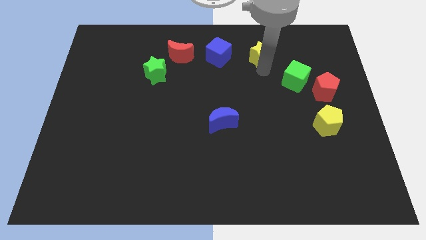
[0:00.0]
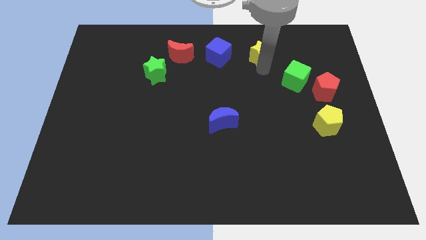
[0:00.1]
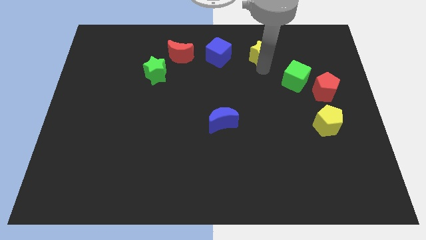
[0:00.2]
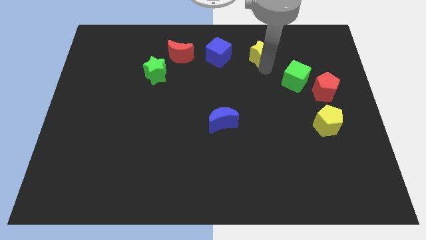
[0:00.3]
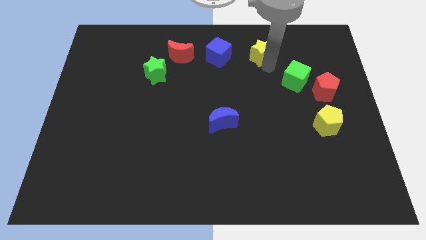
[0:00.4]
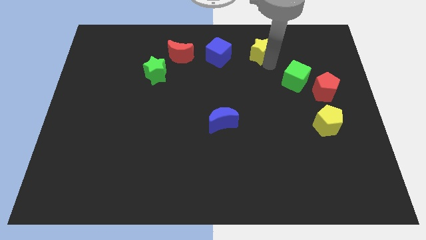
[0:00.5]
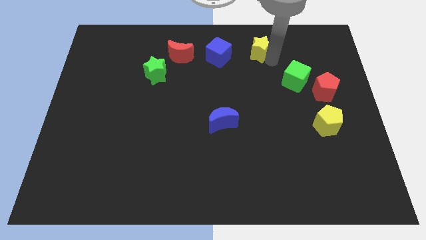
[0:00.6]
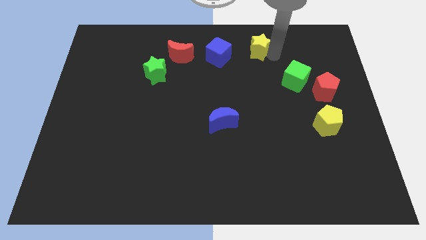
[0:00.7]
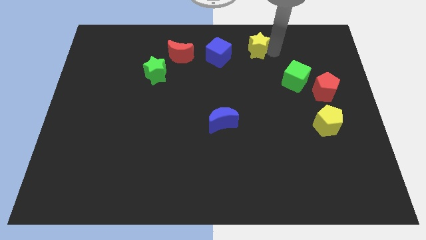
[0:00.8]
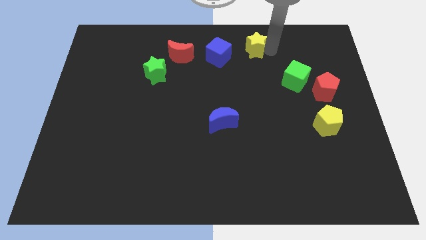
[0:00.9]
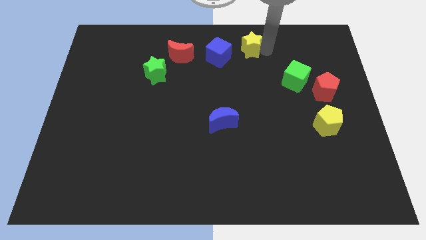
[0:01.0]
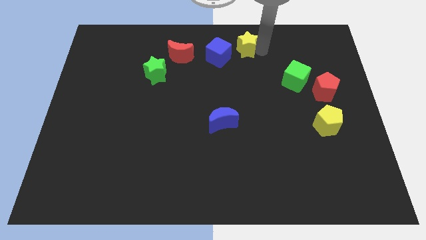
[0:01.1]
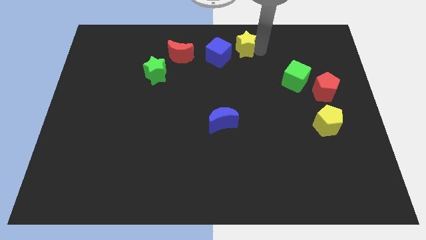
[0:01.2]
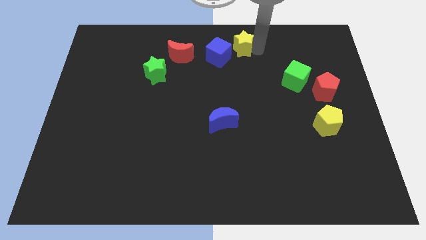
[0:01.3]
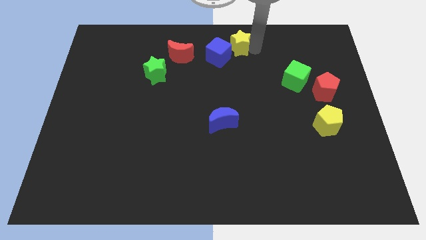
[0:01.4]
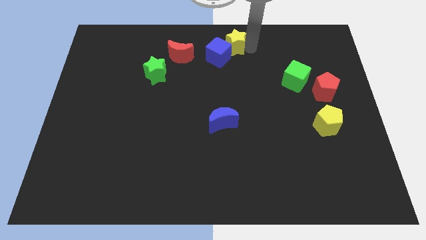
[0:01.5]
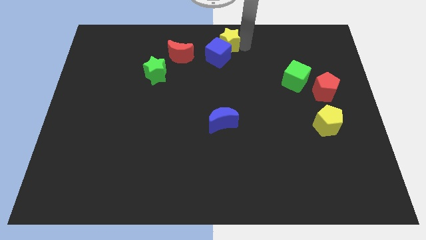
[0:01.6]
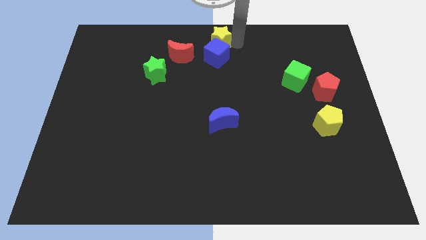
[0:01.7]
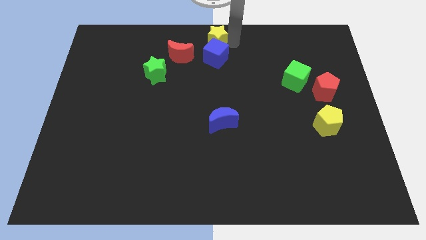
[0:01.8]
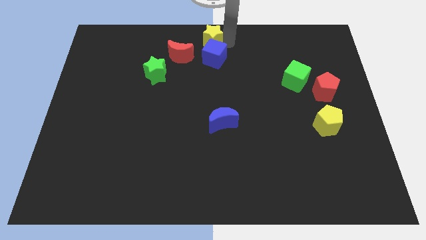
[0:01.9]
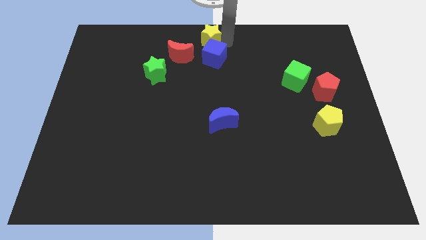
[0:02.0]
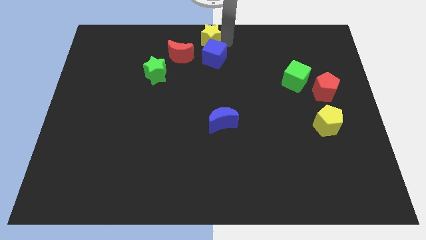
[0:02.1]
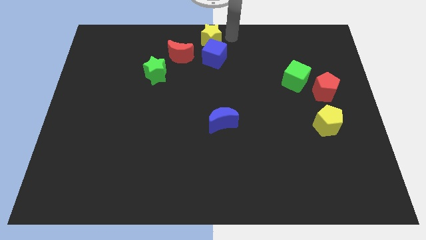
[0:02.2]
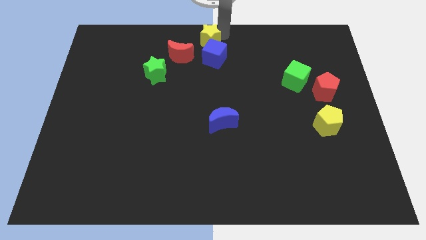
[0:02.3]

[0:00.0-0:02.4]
place the yellow star to the top of blue cube

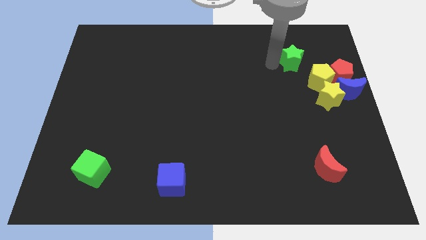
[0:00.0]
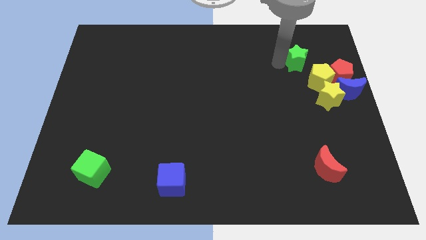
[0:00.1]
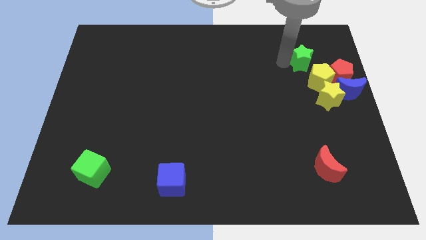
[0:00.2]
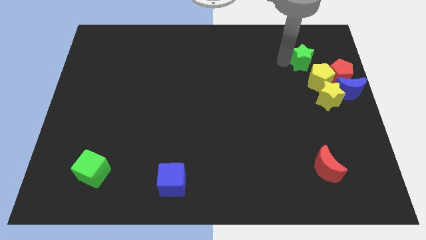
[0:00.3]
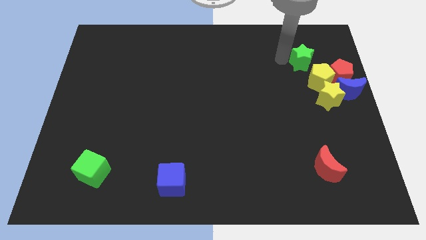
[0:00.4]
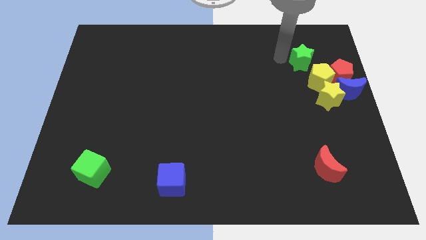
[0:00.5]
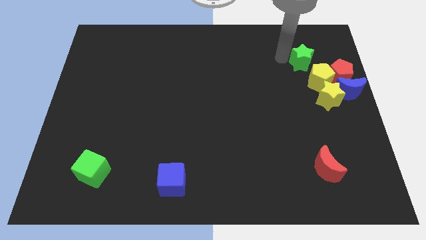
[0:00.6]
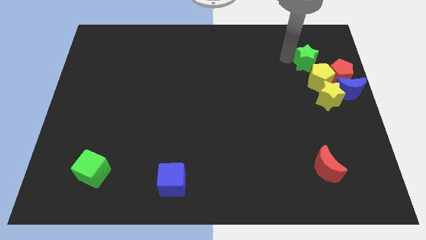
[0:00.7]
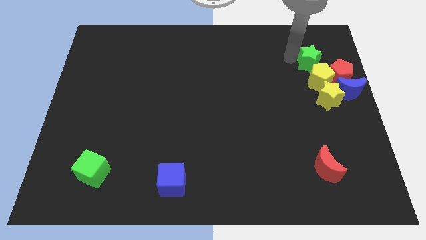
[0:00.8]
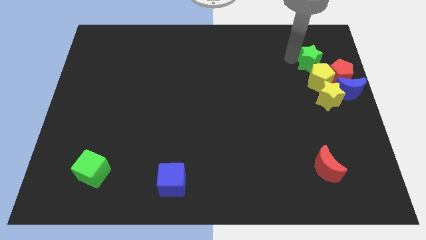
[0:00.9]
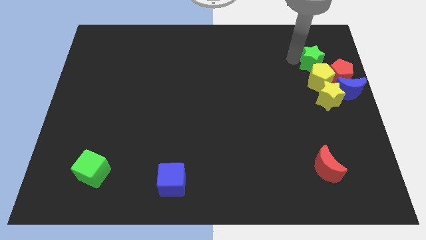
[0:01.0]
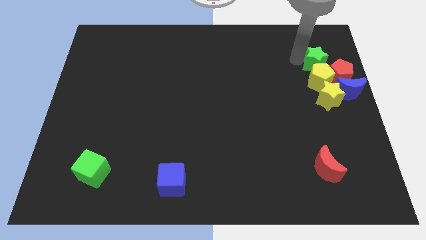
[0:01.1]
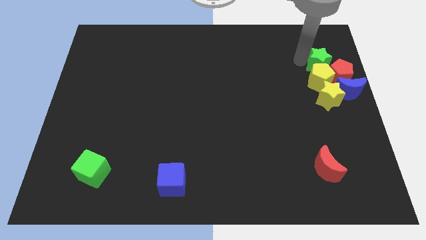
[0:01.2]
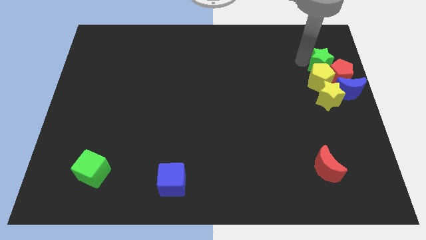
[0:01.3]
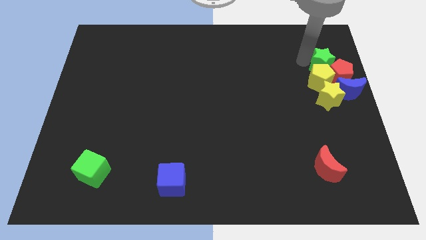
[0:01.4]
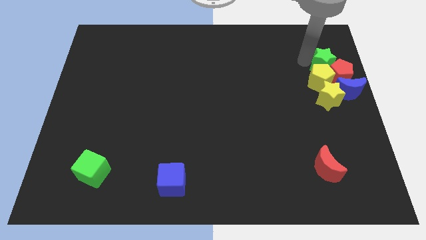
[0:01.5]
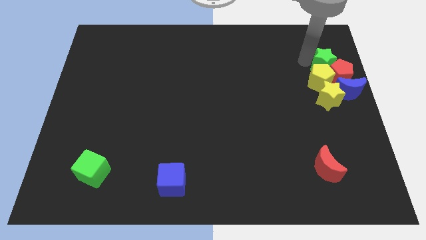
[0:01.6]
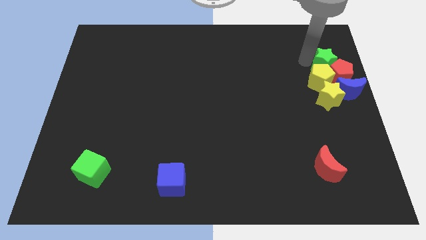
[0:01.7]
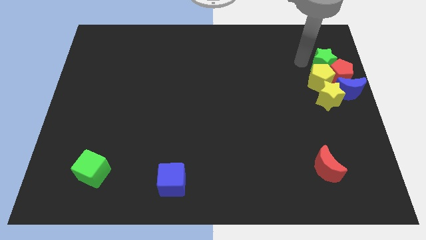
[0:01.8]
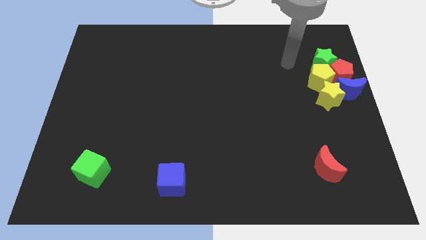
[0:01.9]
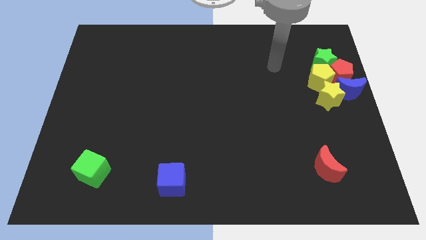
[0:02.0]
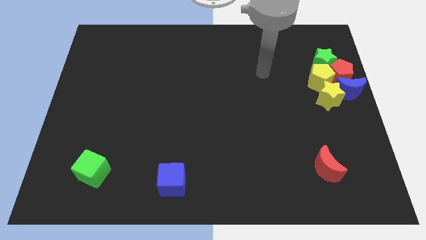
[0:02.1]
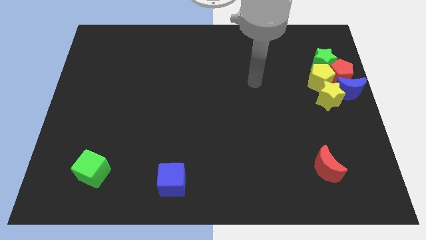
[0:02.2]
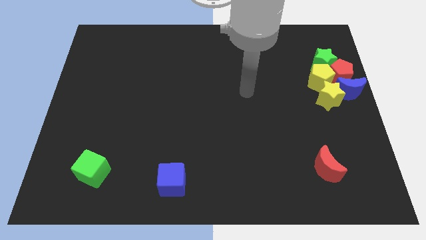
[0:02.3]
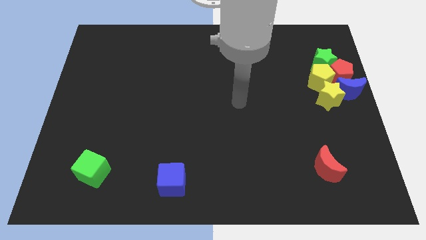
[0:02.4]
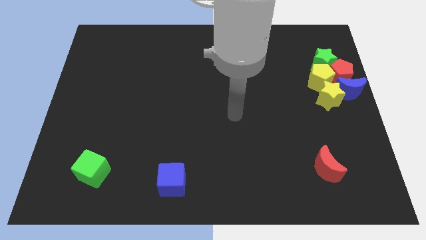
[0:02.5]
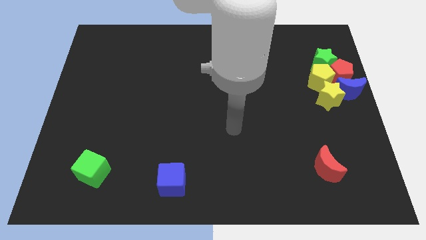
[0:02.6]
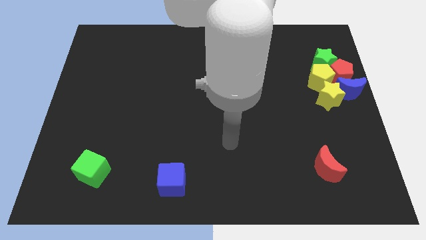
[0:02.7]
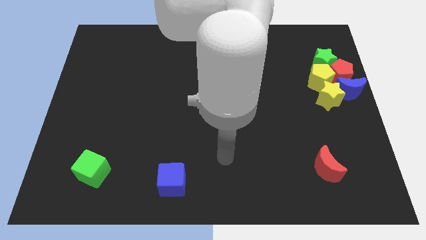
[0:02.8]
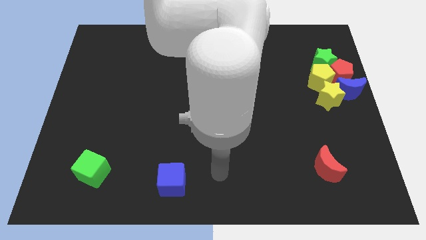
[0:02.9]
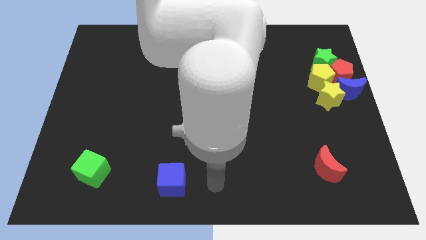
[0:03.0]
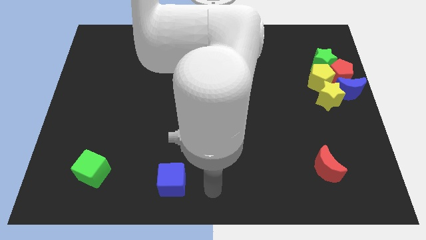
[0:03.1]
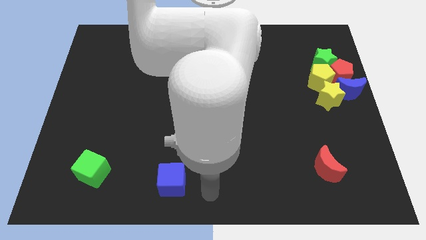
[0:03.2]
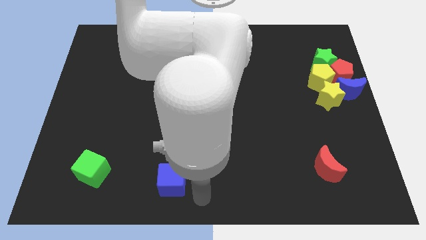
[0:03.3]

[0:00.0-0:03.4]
place a green star close to a group of blocks

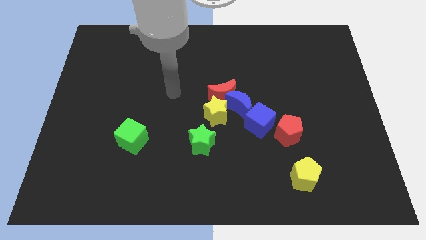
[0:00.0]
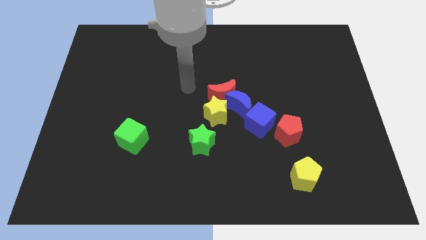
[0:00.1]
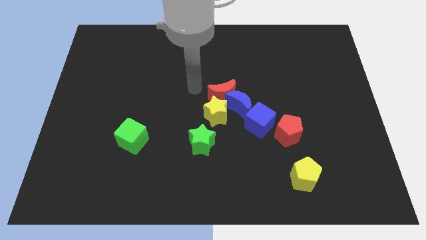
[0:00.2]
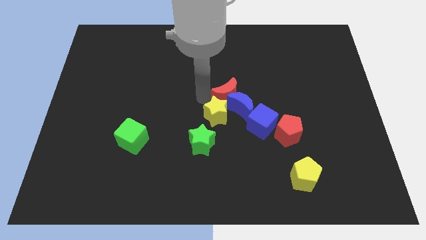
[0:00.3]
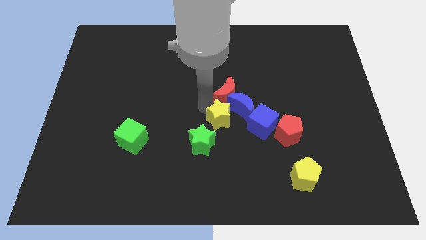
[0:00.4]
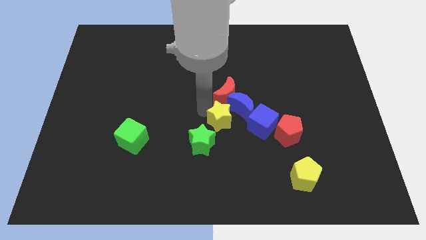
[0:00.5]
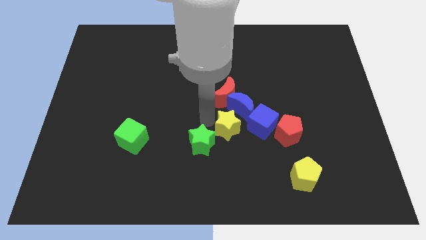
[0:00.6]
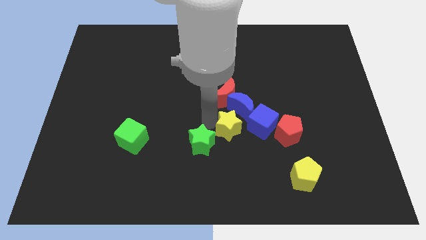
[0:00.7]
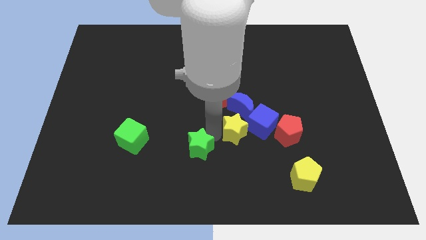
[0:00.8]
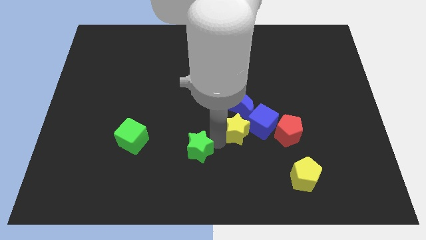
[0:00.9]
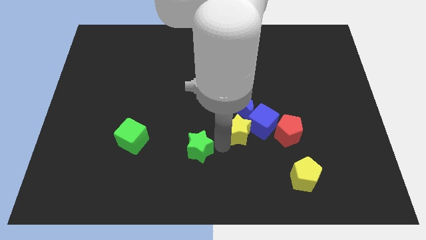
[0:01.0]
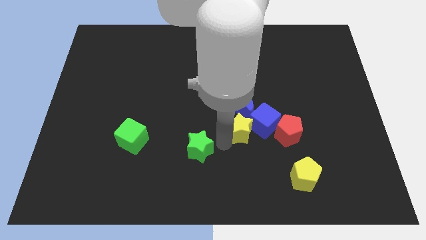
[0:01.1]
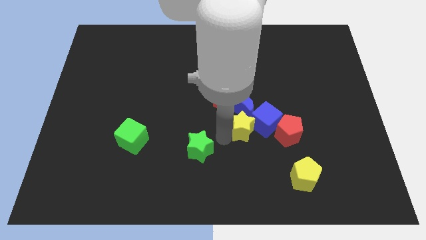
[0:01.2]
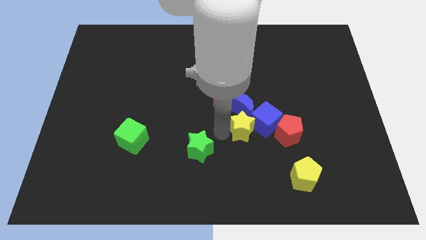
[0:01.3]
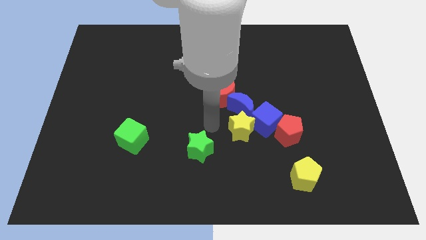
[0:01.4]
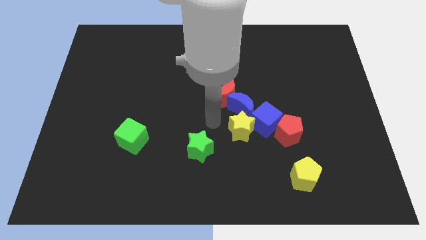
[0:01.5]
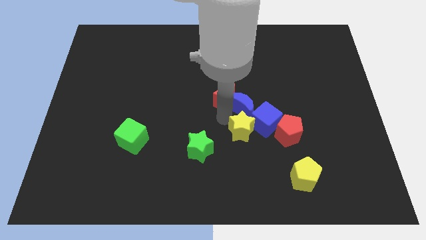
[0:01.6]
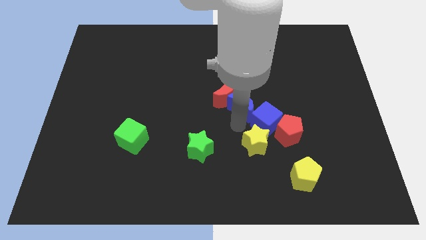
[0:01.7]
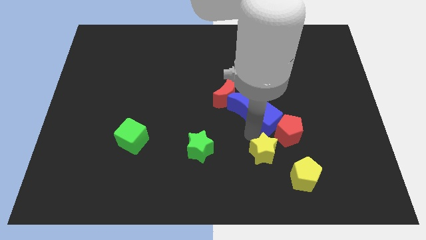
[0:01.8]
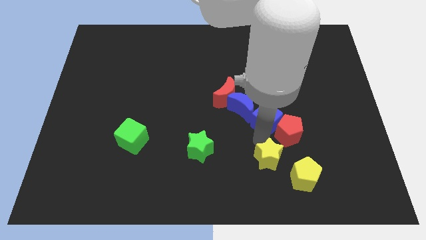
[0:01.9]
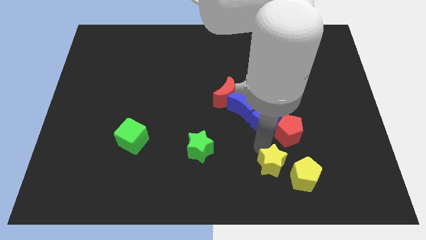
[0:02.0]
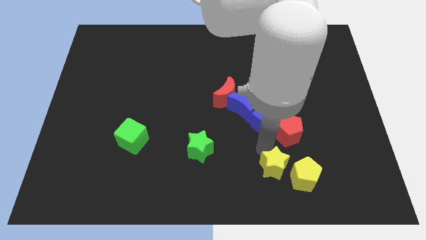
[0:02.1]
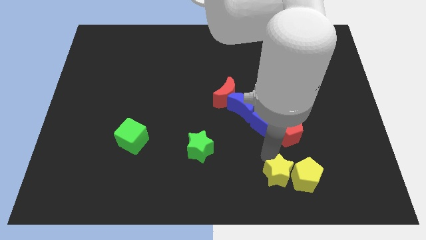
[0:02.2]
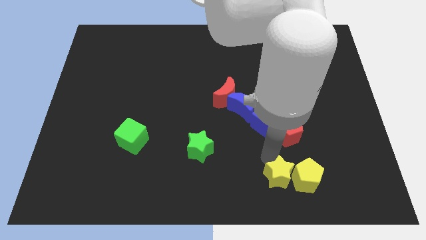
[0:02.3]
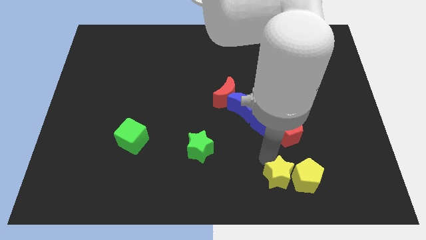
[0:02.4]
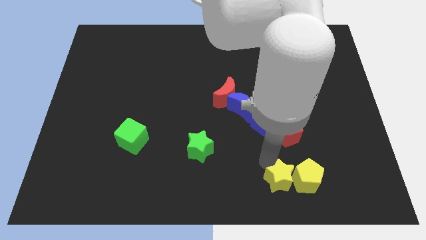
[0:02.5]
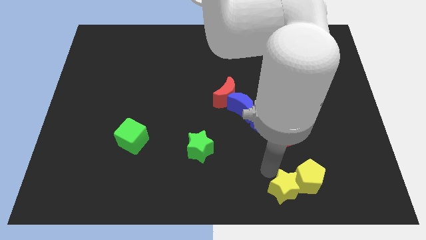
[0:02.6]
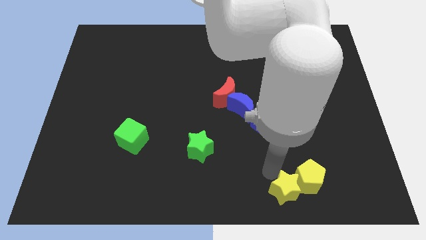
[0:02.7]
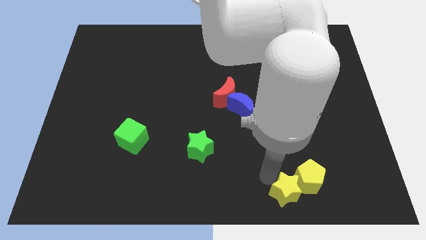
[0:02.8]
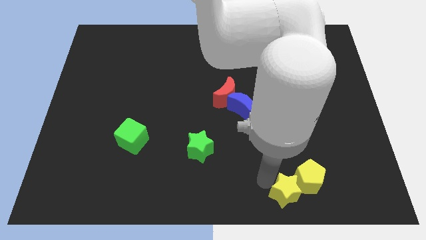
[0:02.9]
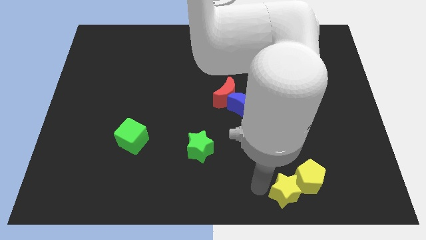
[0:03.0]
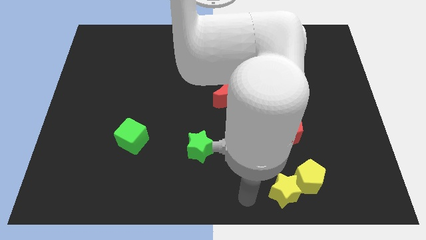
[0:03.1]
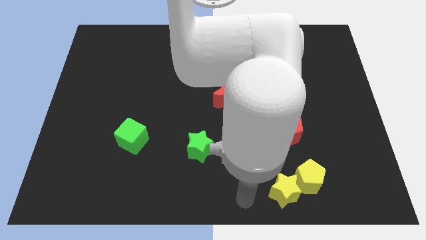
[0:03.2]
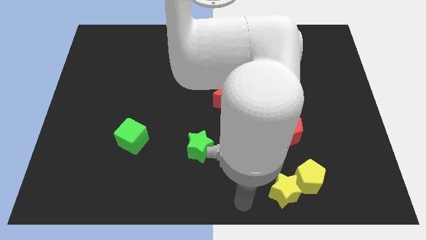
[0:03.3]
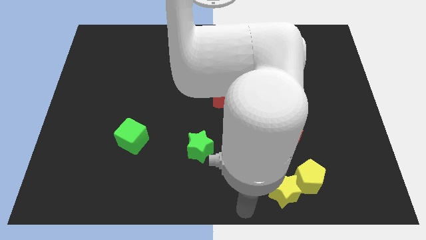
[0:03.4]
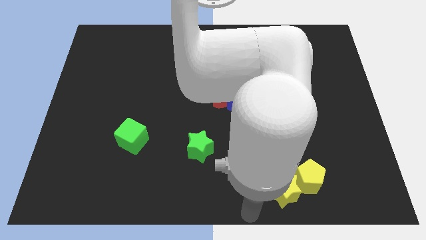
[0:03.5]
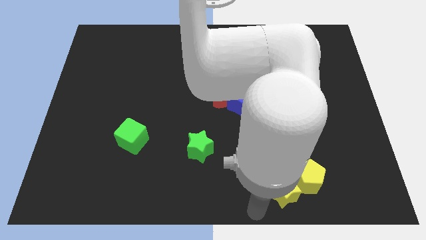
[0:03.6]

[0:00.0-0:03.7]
push the yellow star left to the yellow pentagon
